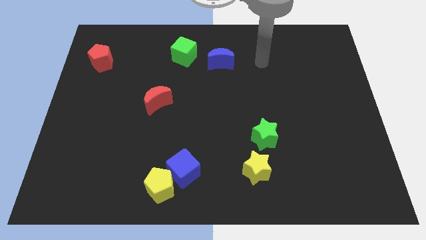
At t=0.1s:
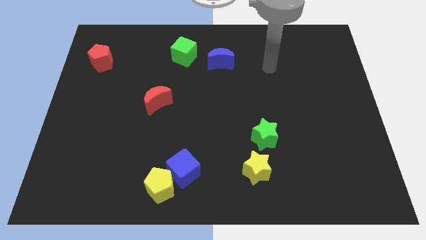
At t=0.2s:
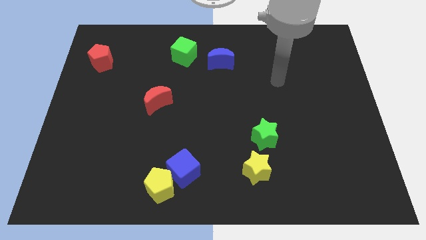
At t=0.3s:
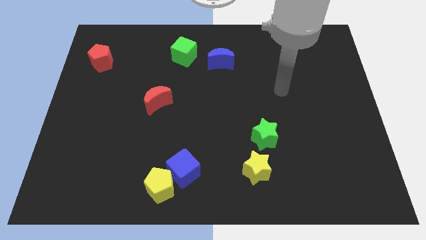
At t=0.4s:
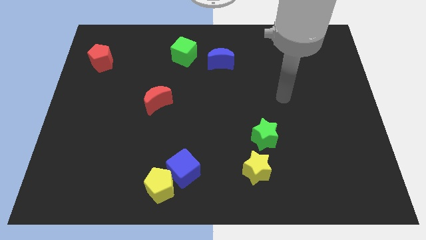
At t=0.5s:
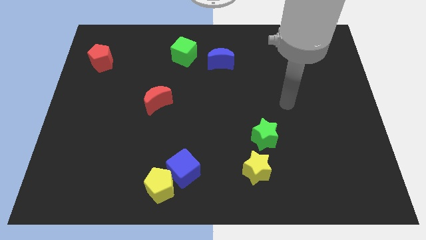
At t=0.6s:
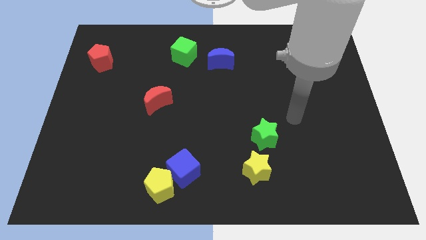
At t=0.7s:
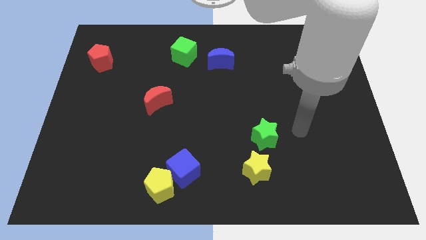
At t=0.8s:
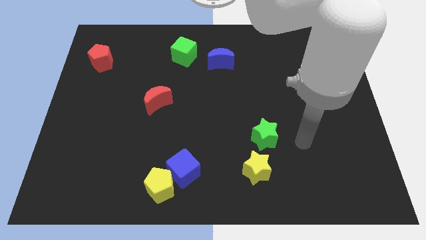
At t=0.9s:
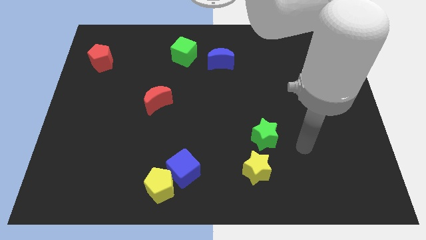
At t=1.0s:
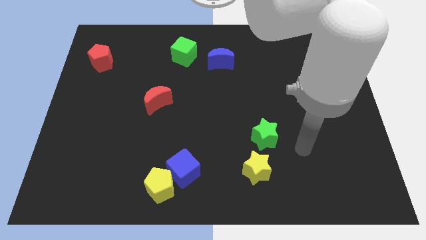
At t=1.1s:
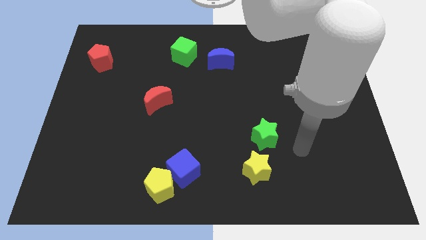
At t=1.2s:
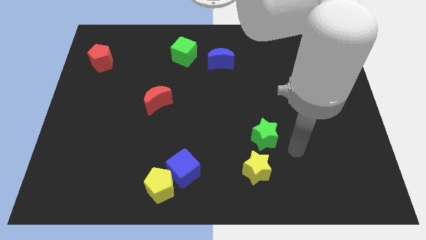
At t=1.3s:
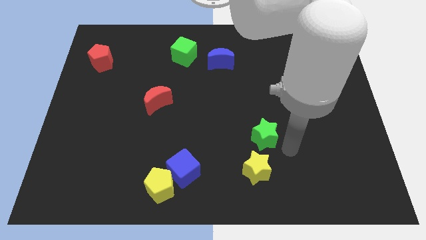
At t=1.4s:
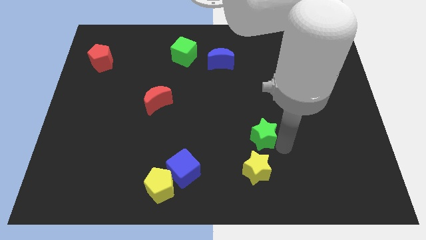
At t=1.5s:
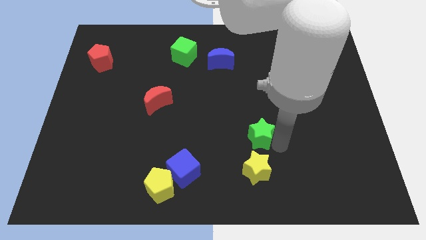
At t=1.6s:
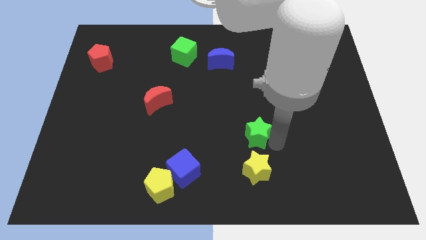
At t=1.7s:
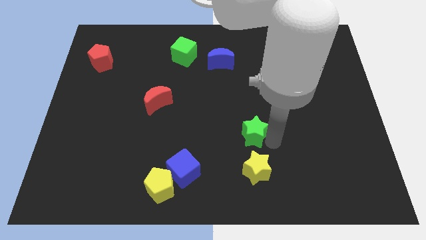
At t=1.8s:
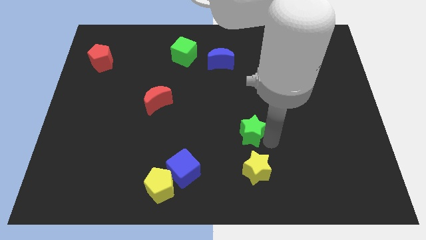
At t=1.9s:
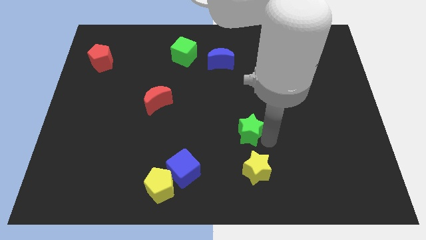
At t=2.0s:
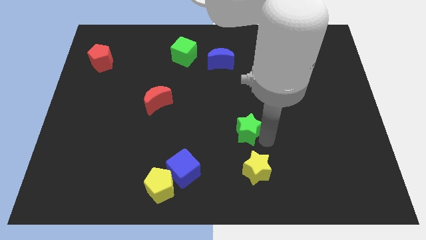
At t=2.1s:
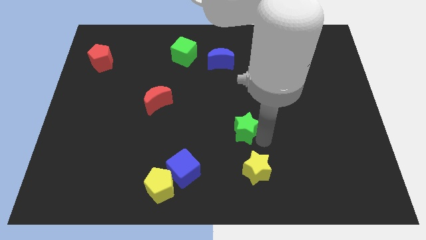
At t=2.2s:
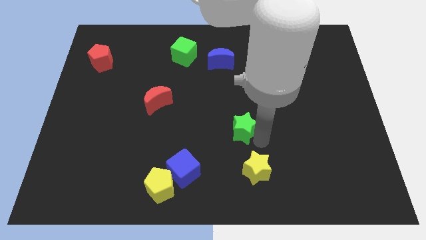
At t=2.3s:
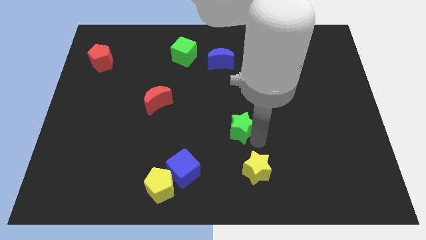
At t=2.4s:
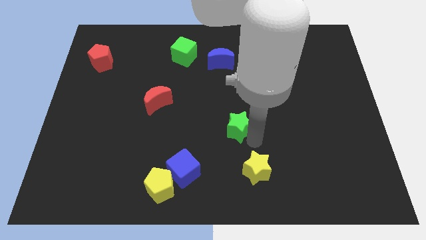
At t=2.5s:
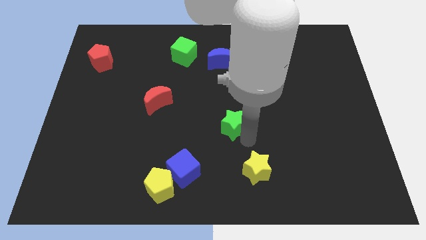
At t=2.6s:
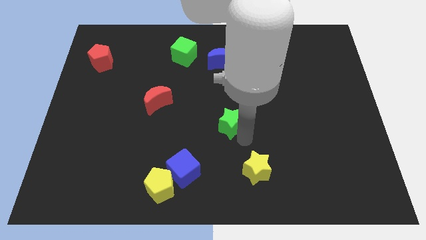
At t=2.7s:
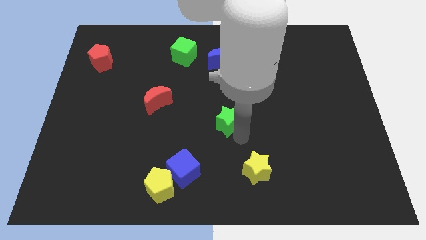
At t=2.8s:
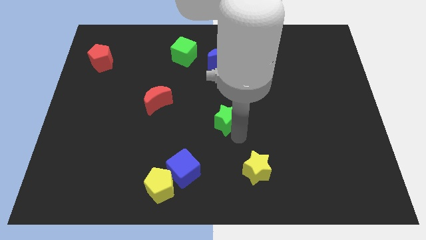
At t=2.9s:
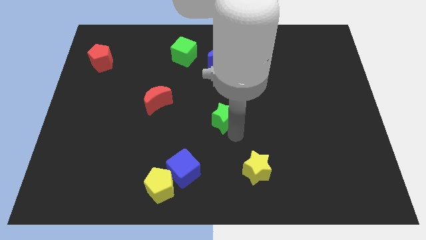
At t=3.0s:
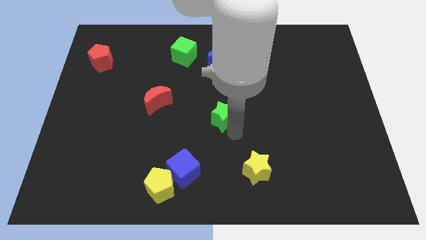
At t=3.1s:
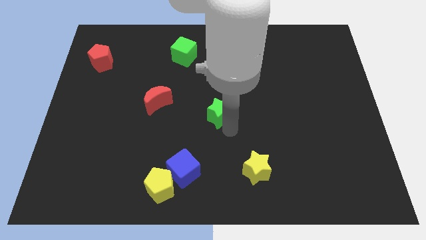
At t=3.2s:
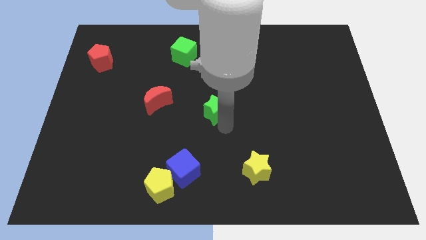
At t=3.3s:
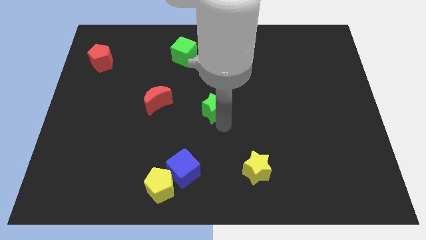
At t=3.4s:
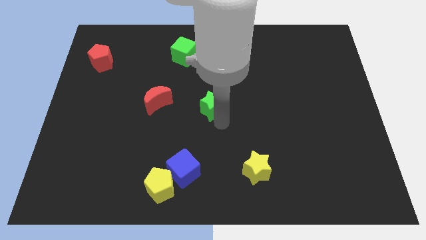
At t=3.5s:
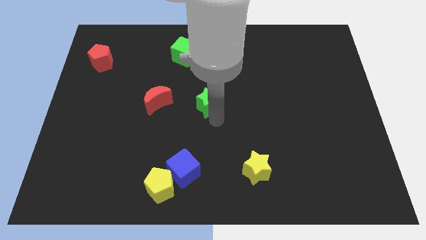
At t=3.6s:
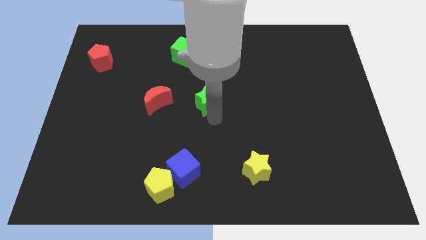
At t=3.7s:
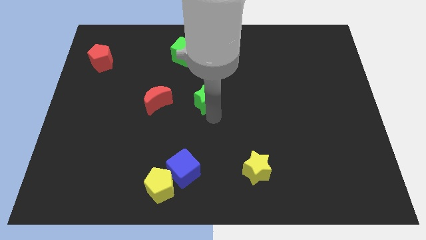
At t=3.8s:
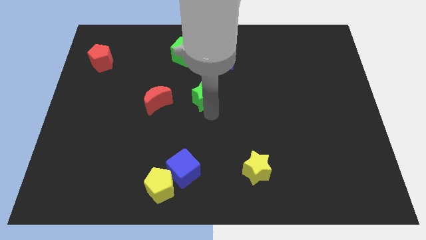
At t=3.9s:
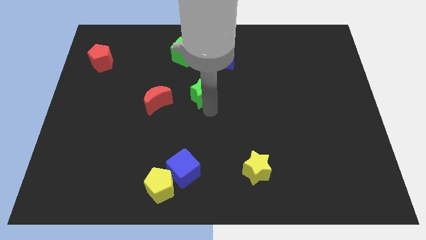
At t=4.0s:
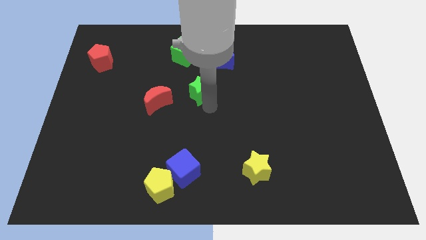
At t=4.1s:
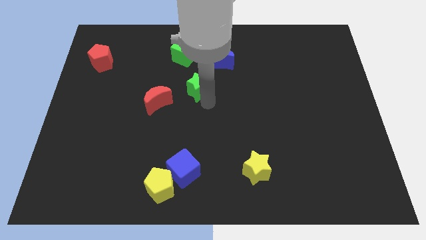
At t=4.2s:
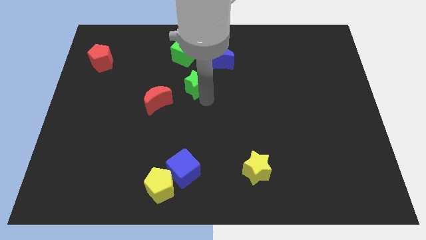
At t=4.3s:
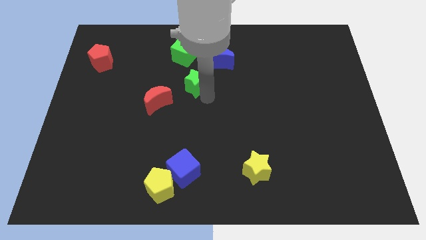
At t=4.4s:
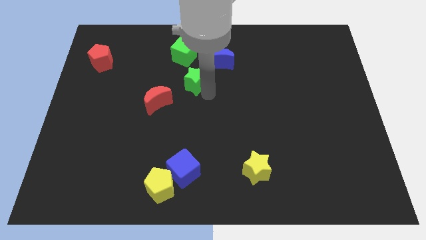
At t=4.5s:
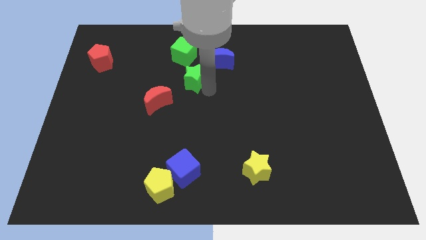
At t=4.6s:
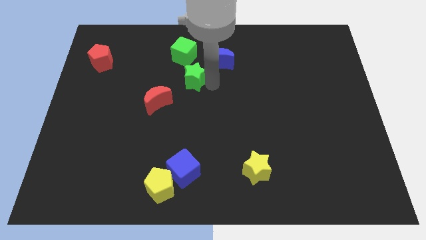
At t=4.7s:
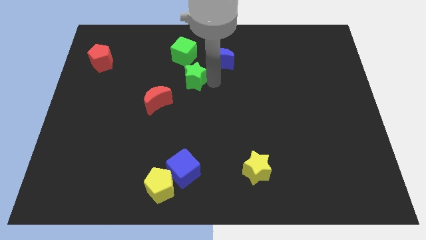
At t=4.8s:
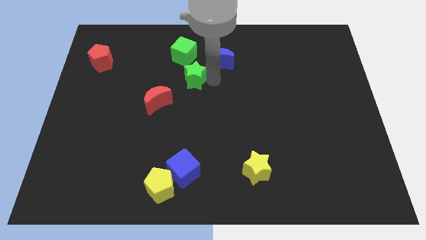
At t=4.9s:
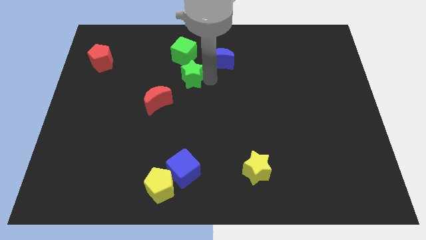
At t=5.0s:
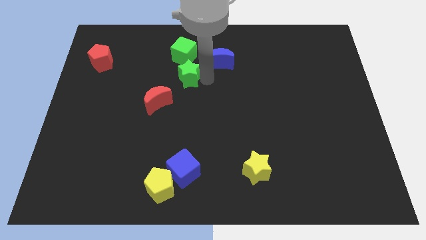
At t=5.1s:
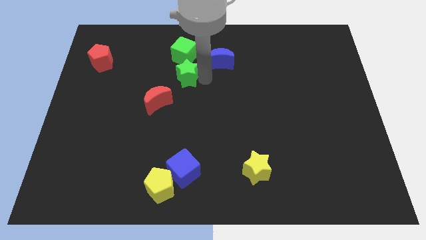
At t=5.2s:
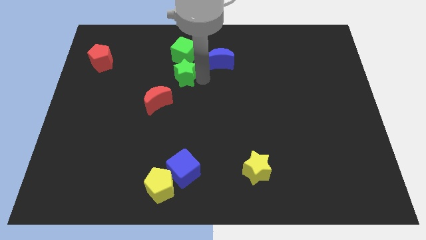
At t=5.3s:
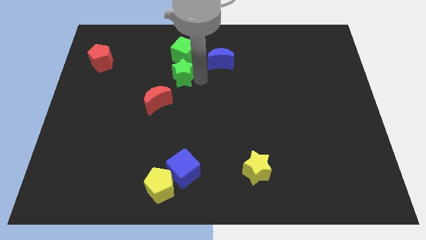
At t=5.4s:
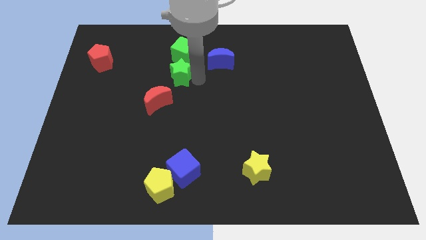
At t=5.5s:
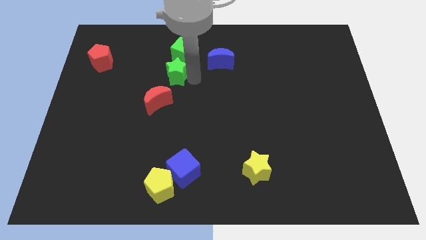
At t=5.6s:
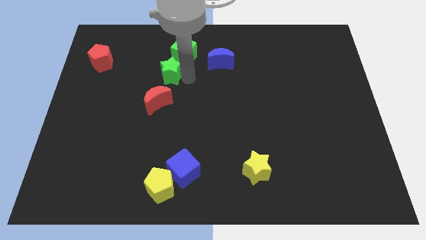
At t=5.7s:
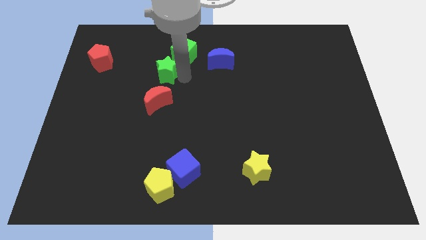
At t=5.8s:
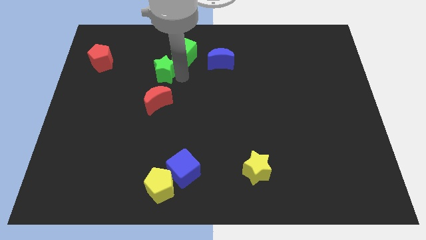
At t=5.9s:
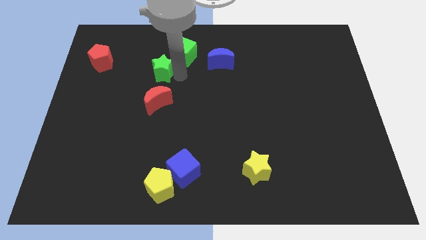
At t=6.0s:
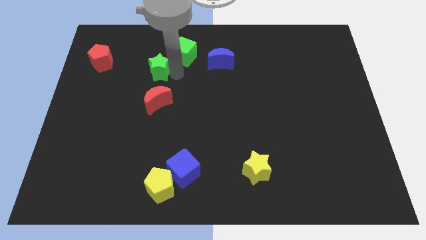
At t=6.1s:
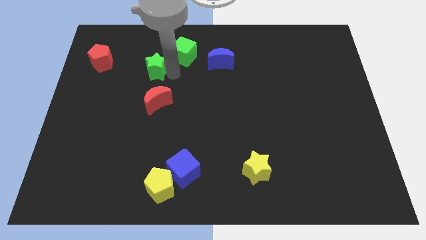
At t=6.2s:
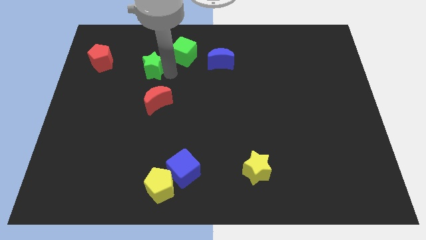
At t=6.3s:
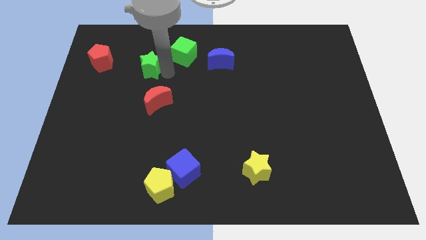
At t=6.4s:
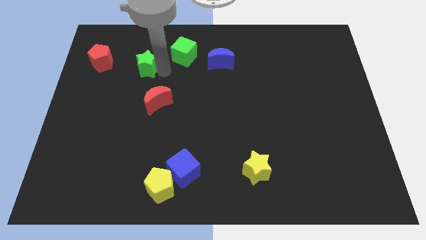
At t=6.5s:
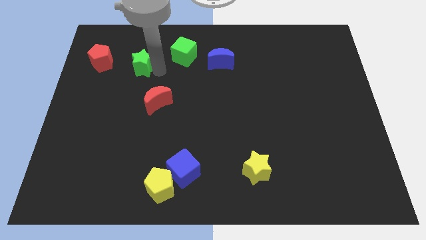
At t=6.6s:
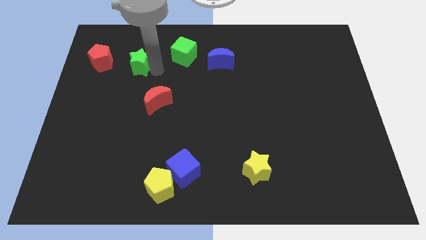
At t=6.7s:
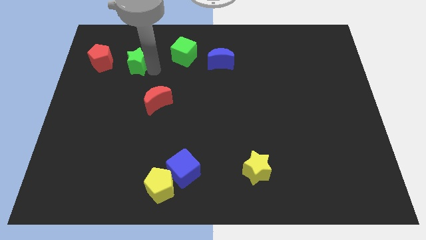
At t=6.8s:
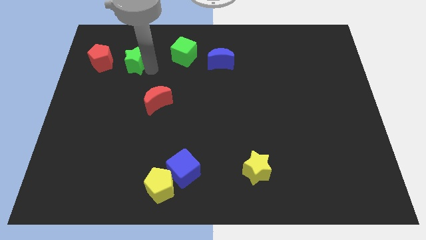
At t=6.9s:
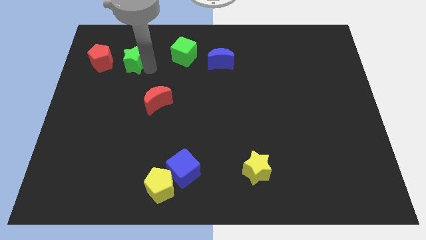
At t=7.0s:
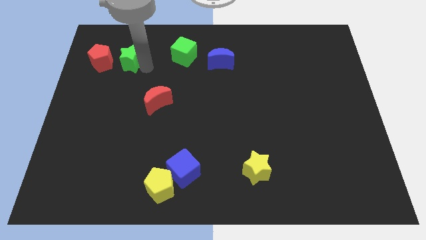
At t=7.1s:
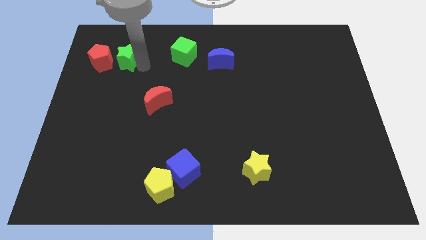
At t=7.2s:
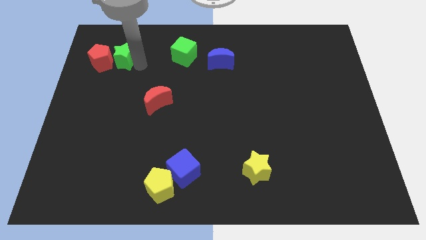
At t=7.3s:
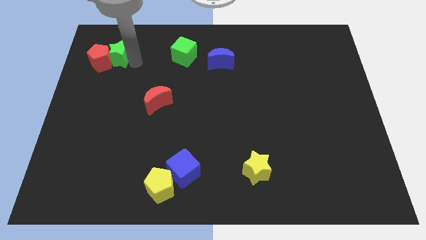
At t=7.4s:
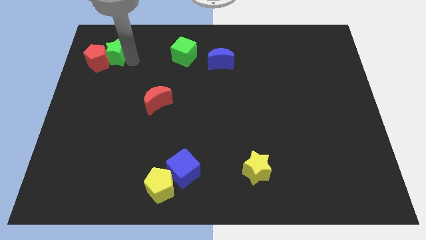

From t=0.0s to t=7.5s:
push the green star towards the red pentagon

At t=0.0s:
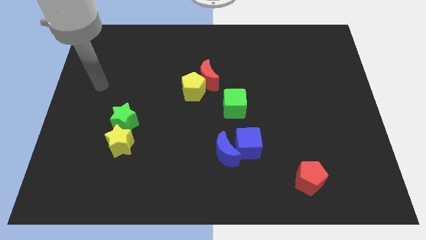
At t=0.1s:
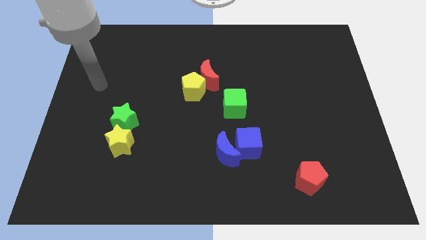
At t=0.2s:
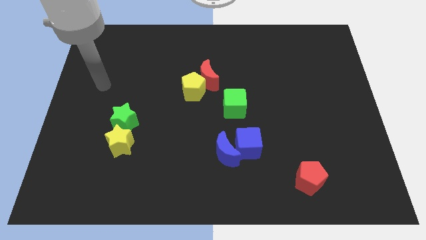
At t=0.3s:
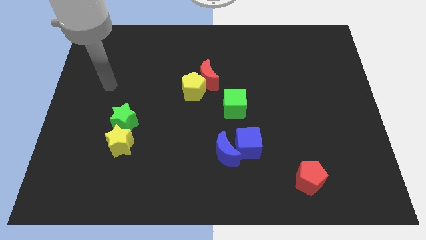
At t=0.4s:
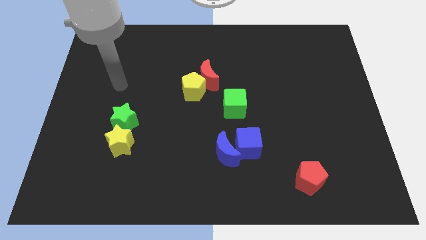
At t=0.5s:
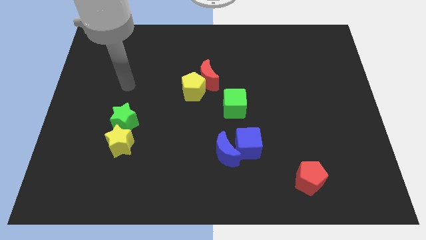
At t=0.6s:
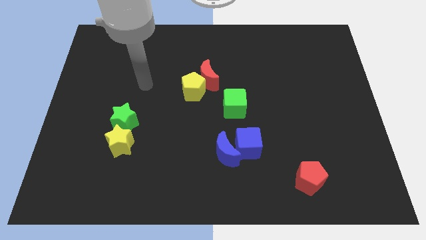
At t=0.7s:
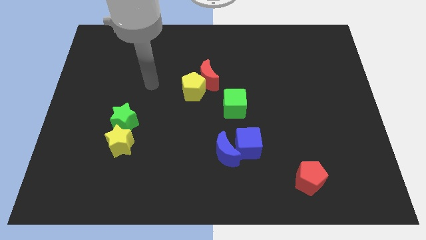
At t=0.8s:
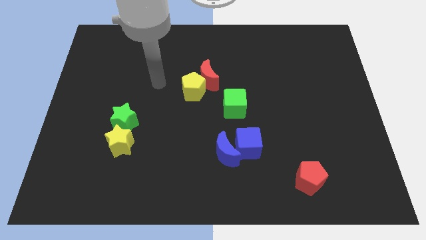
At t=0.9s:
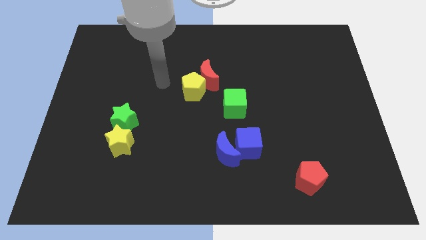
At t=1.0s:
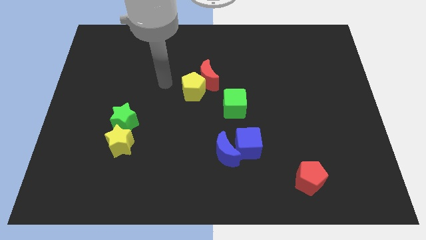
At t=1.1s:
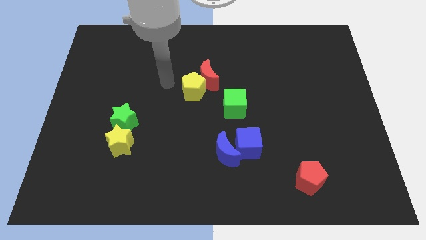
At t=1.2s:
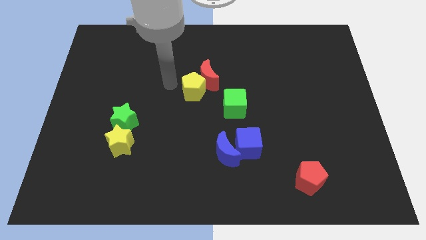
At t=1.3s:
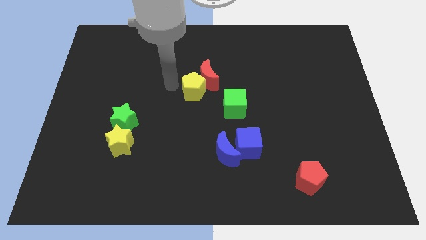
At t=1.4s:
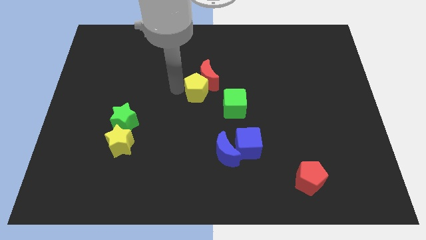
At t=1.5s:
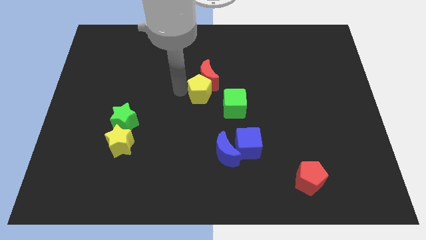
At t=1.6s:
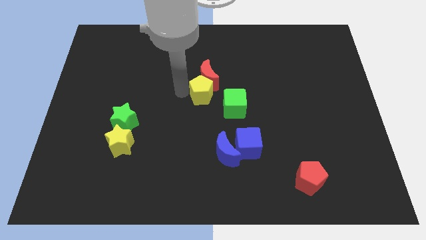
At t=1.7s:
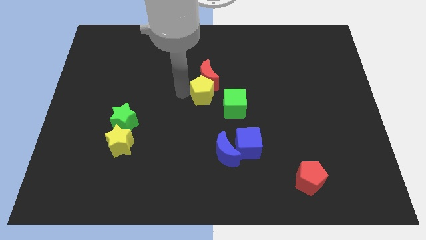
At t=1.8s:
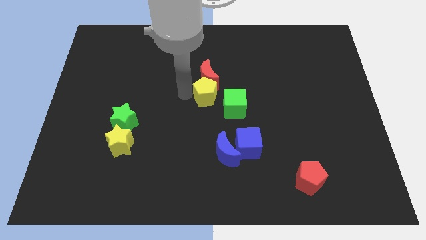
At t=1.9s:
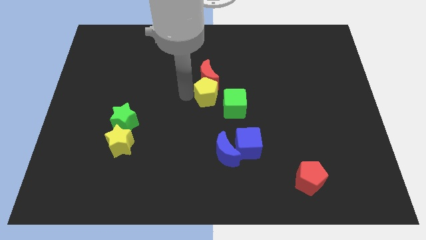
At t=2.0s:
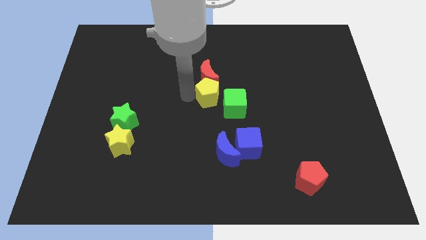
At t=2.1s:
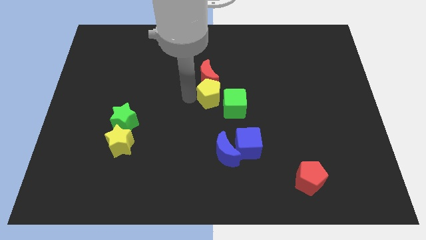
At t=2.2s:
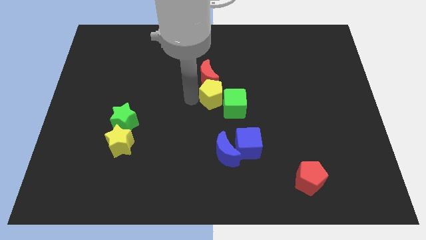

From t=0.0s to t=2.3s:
put the yellow pentagon to the green cube
